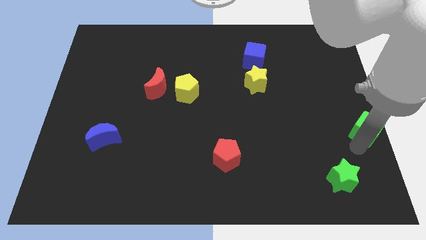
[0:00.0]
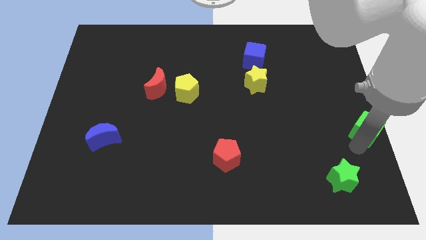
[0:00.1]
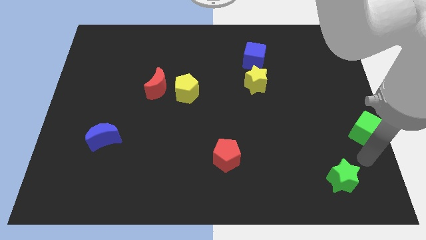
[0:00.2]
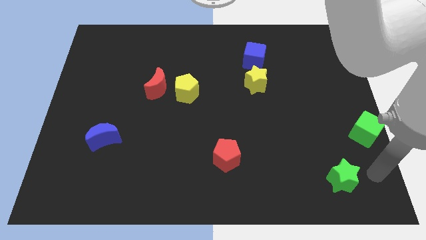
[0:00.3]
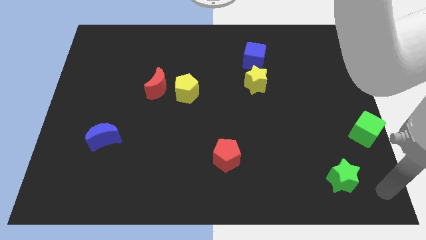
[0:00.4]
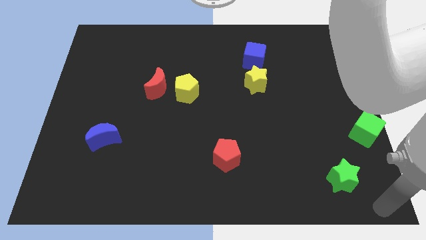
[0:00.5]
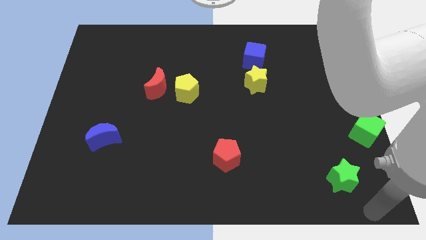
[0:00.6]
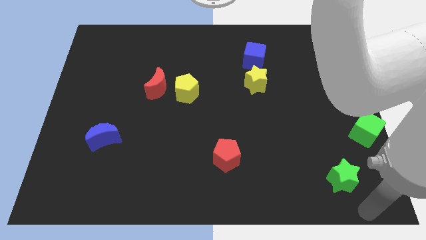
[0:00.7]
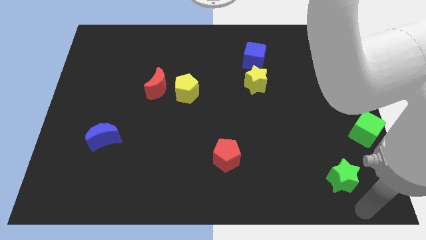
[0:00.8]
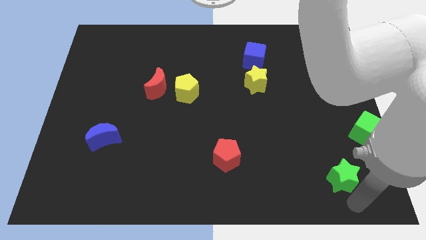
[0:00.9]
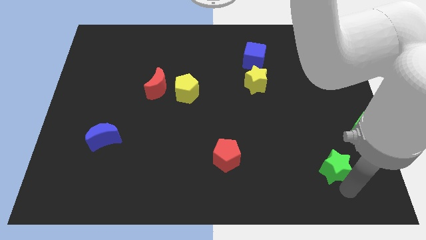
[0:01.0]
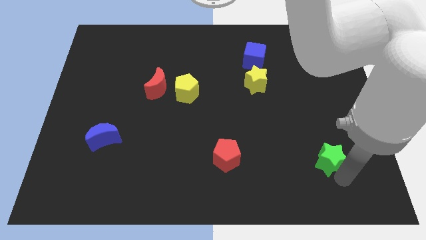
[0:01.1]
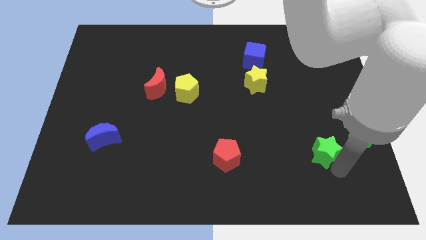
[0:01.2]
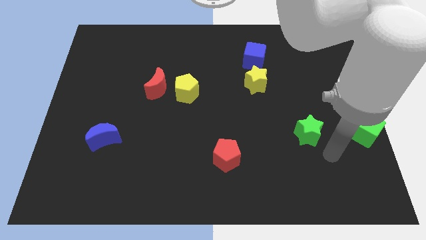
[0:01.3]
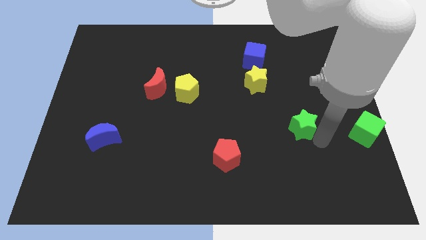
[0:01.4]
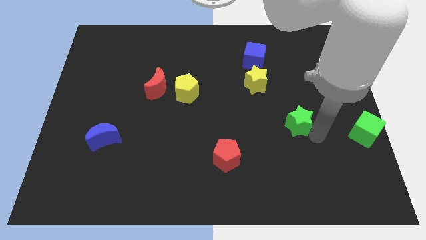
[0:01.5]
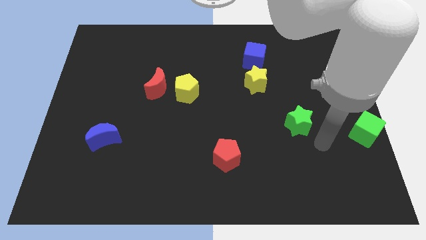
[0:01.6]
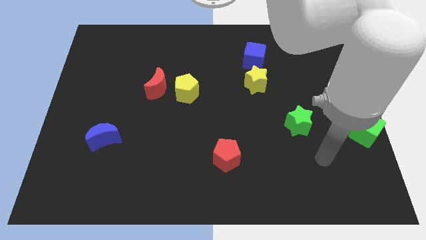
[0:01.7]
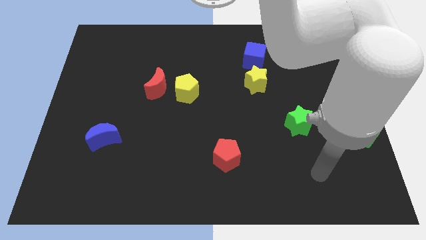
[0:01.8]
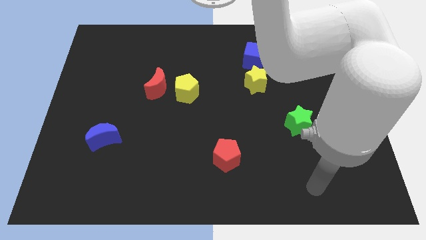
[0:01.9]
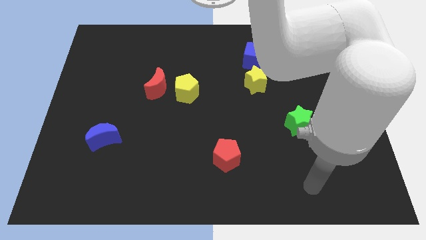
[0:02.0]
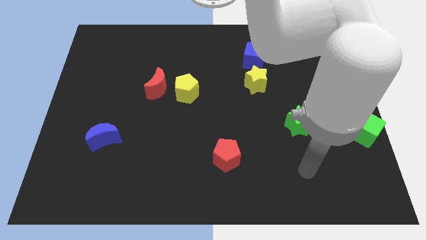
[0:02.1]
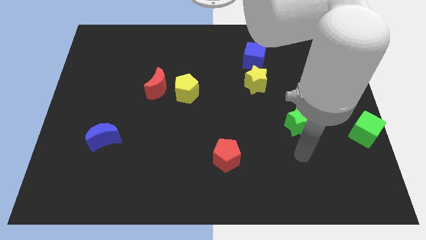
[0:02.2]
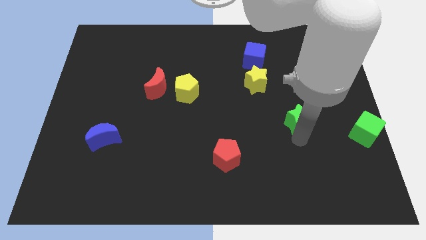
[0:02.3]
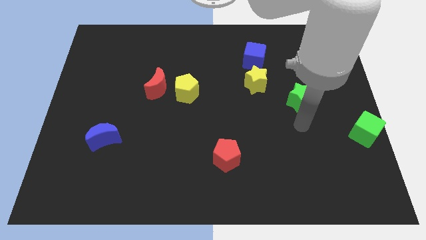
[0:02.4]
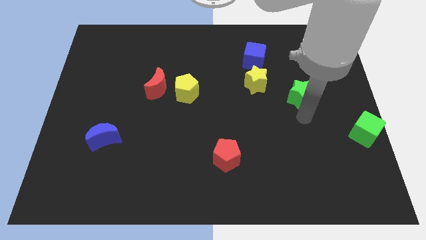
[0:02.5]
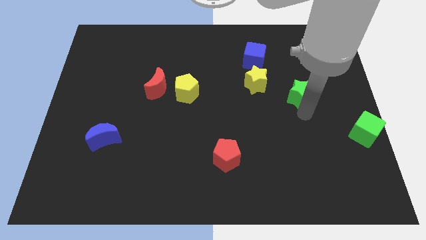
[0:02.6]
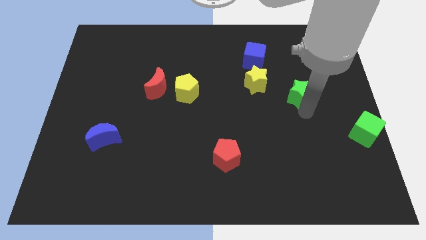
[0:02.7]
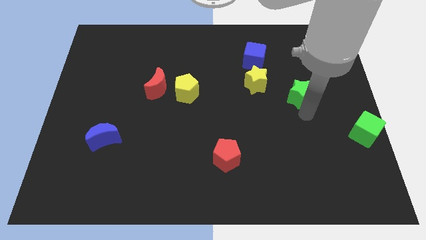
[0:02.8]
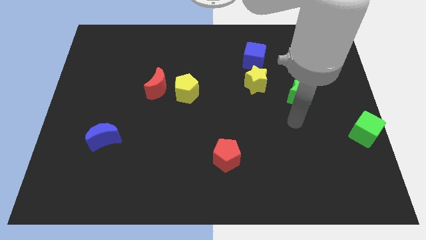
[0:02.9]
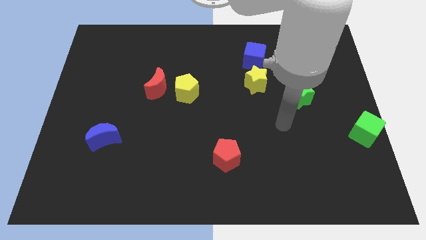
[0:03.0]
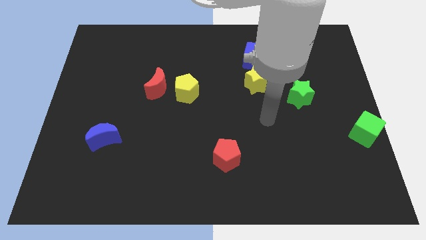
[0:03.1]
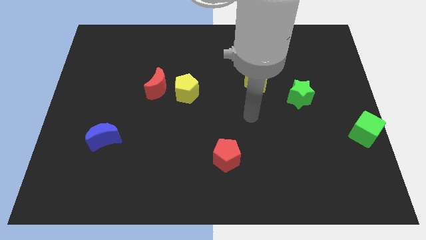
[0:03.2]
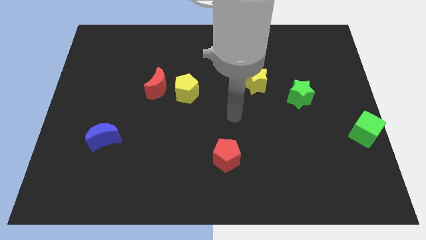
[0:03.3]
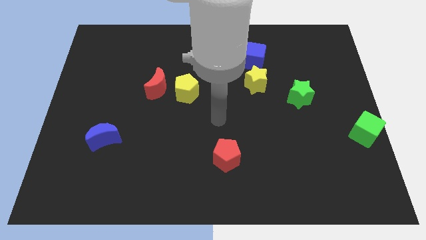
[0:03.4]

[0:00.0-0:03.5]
move the green star diagonal to the green cube

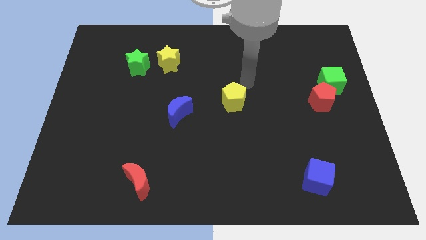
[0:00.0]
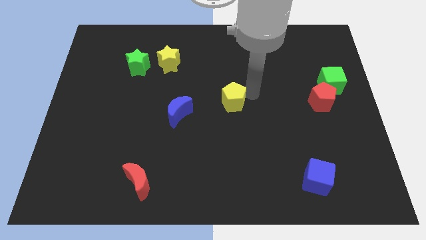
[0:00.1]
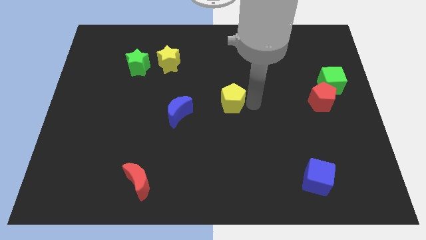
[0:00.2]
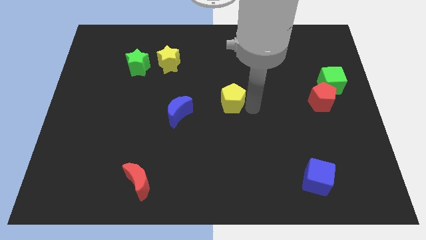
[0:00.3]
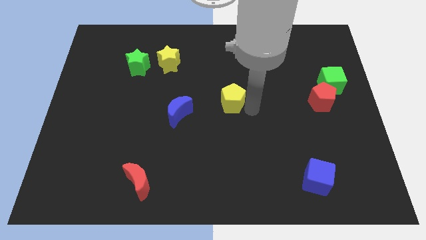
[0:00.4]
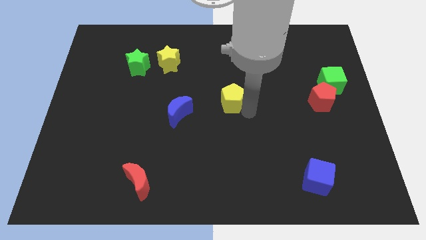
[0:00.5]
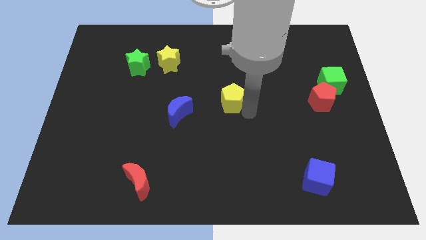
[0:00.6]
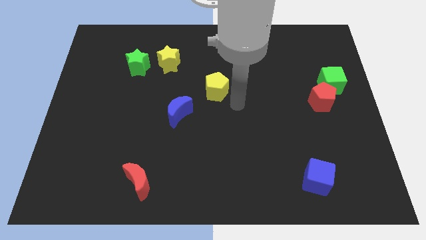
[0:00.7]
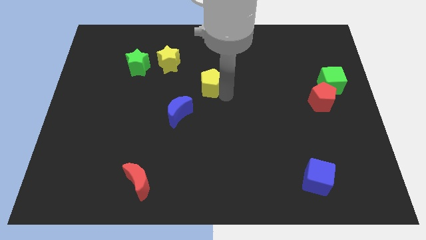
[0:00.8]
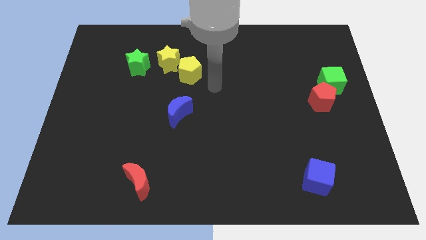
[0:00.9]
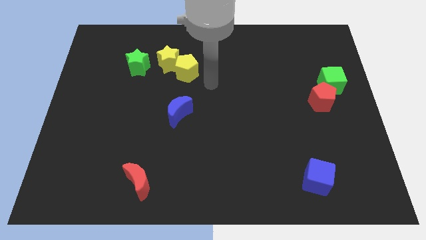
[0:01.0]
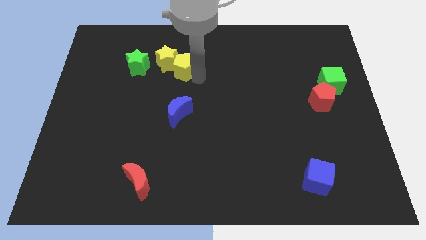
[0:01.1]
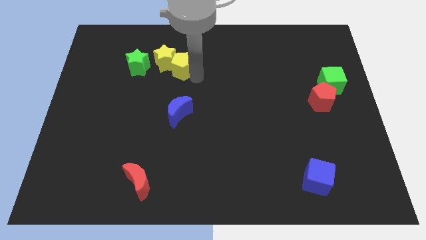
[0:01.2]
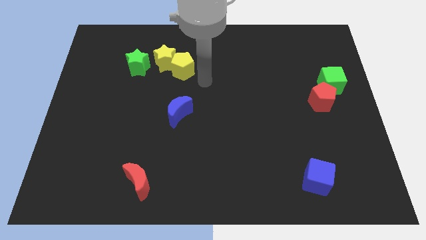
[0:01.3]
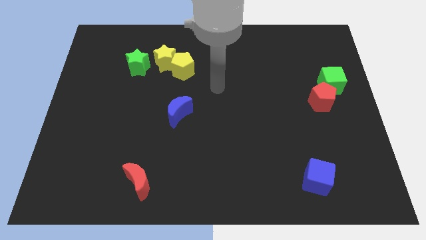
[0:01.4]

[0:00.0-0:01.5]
push the yellow pentagon into the yellow star

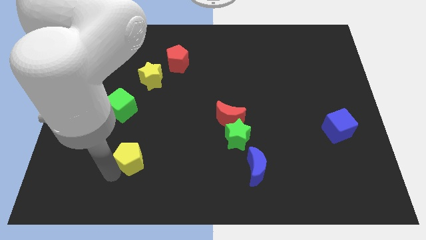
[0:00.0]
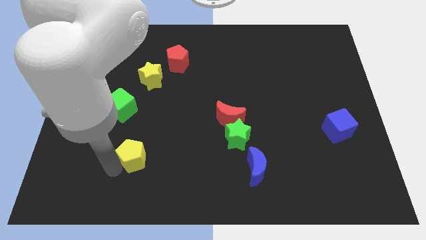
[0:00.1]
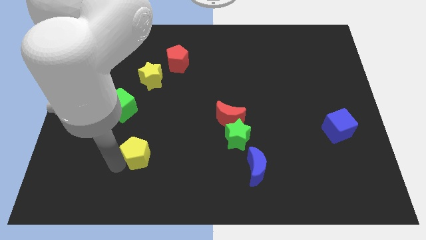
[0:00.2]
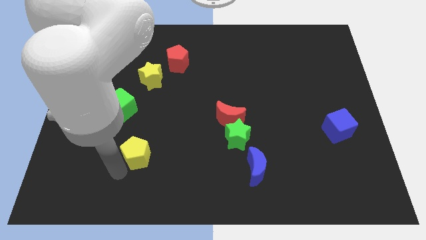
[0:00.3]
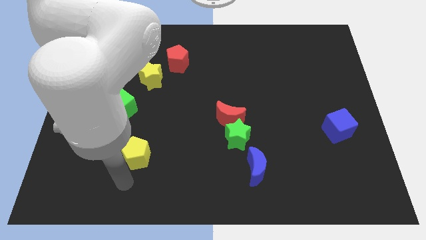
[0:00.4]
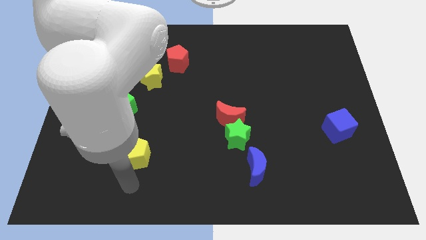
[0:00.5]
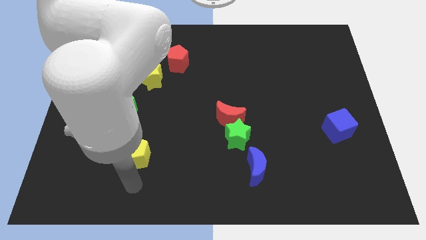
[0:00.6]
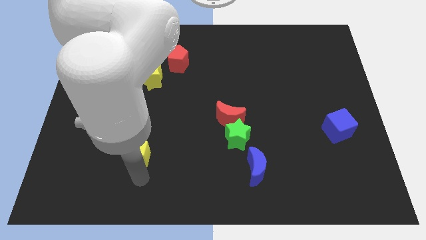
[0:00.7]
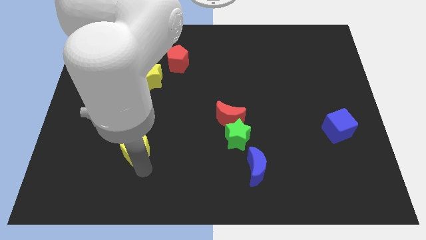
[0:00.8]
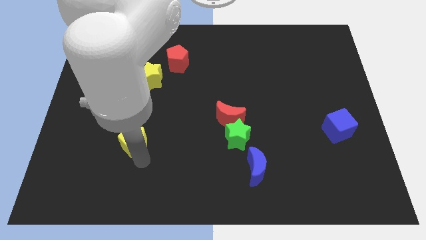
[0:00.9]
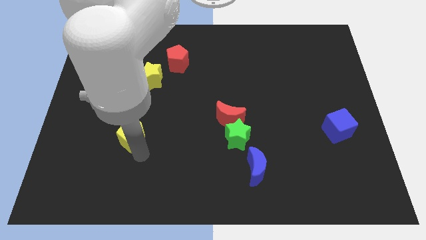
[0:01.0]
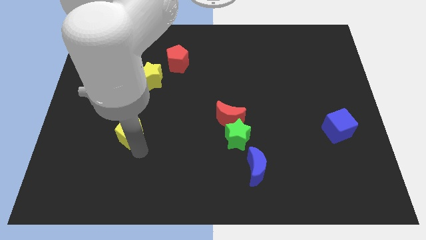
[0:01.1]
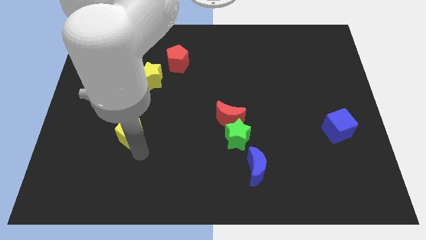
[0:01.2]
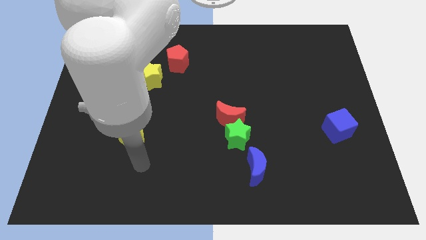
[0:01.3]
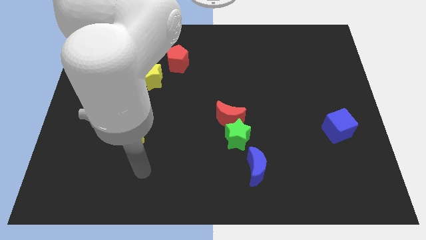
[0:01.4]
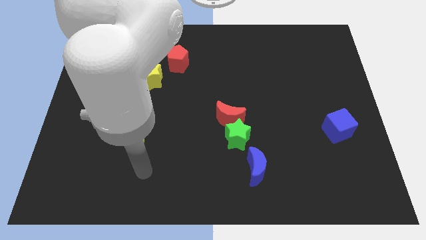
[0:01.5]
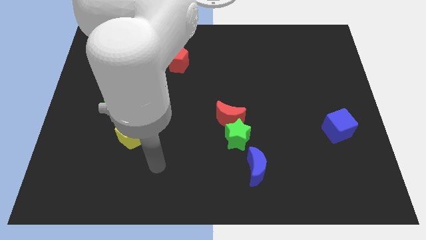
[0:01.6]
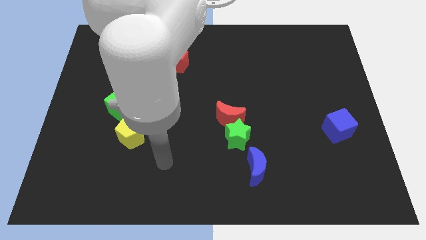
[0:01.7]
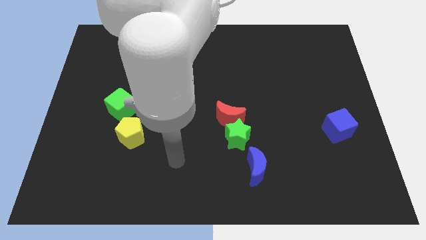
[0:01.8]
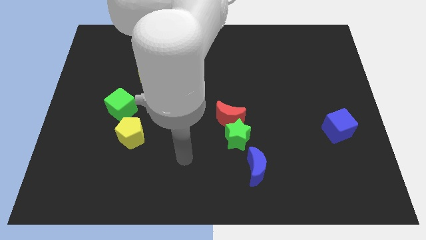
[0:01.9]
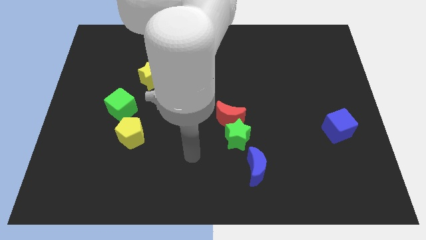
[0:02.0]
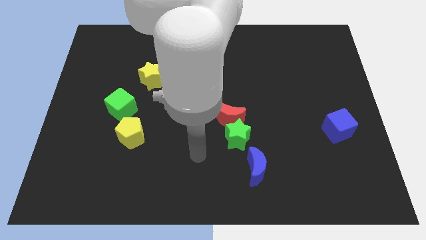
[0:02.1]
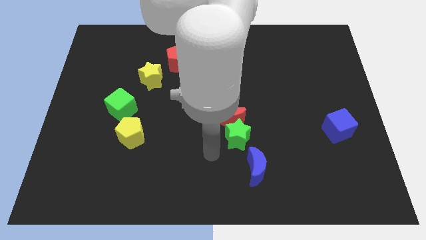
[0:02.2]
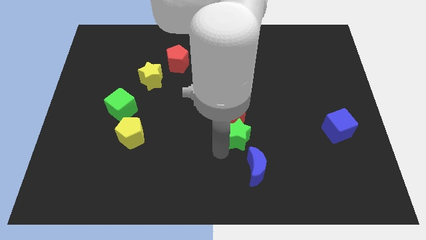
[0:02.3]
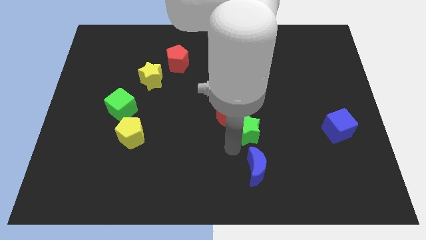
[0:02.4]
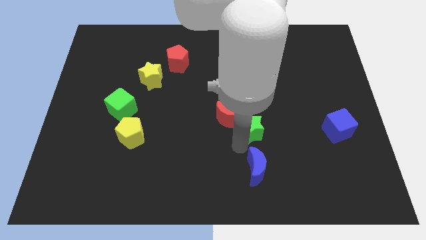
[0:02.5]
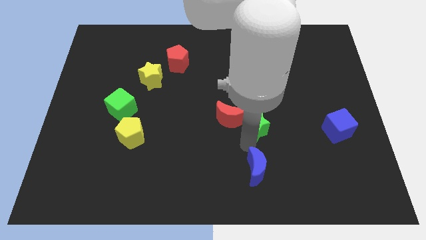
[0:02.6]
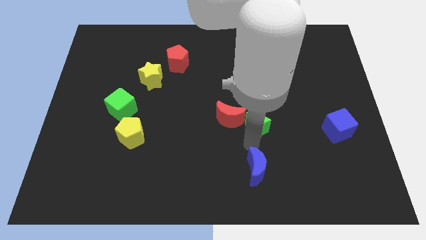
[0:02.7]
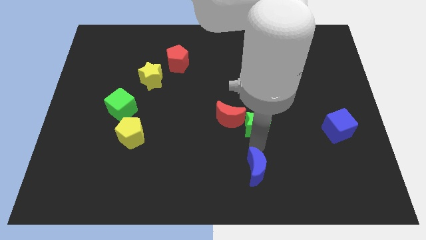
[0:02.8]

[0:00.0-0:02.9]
place green star above blue crescent

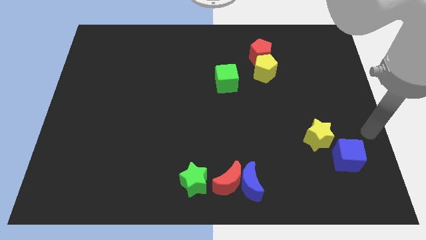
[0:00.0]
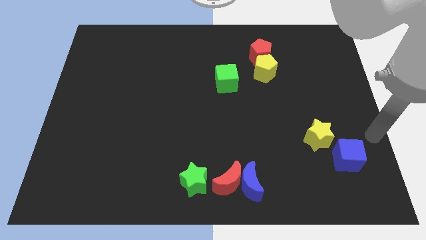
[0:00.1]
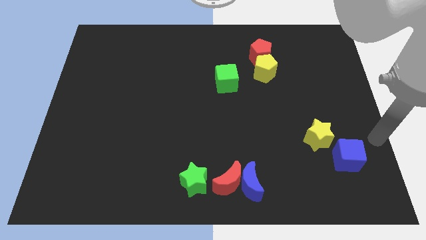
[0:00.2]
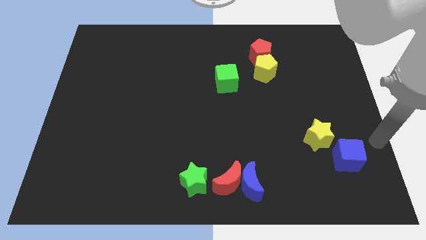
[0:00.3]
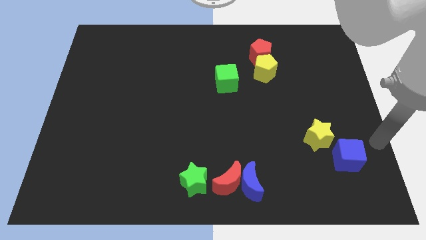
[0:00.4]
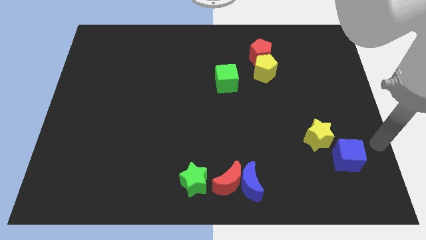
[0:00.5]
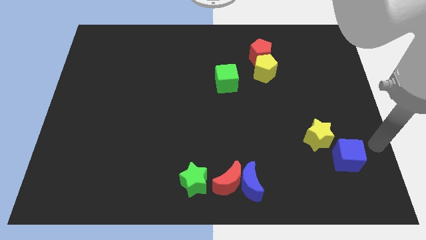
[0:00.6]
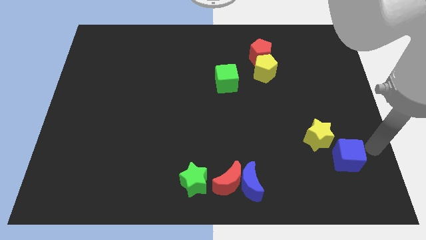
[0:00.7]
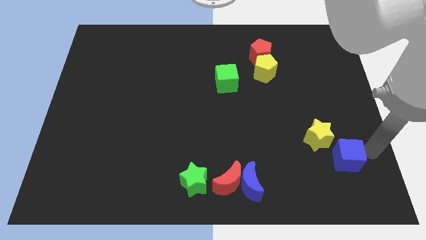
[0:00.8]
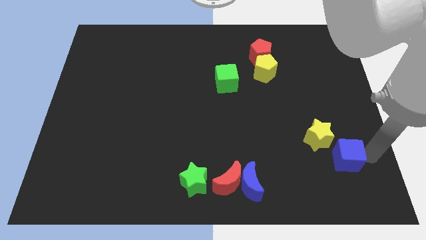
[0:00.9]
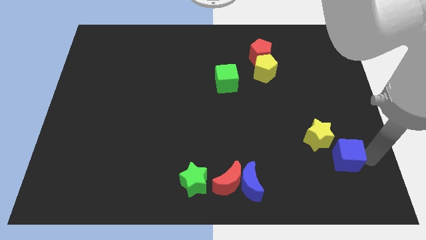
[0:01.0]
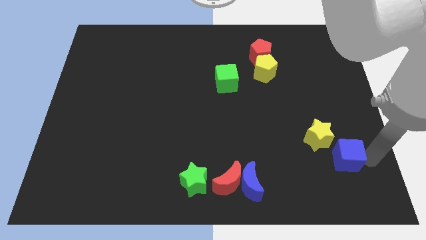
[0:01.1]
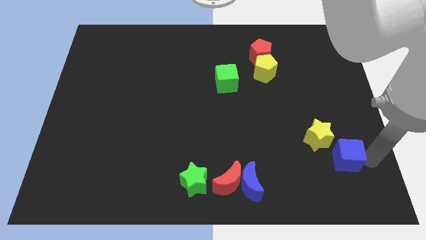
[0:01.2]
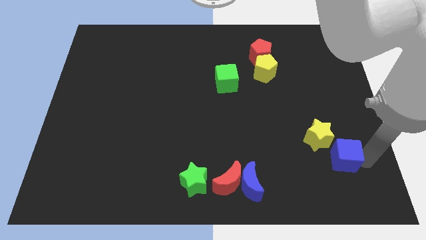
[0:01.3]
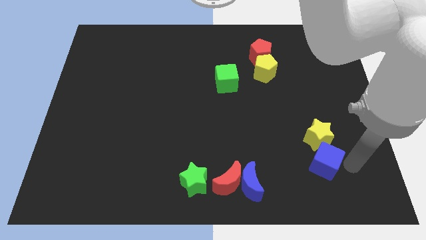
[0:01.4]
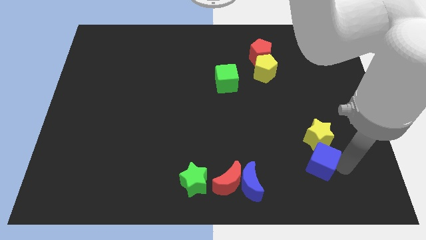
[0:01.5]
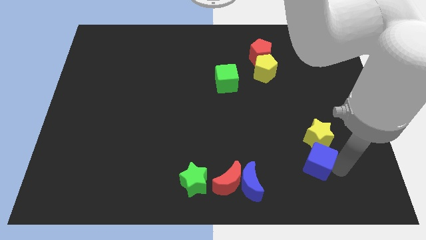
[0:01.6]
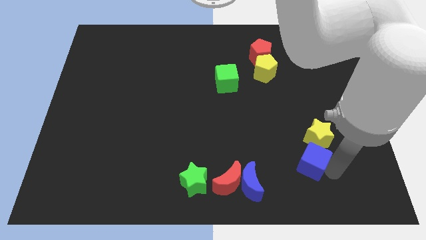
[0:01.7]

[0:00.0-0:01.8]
move the blue cube at the bottom of the yellow star
